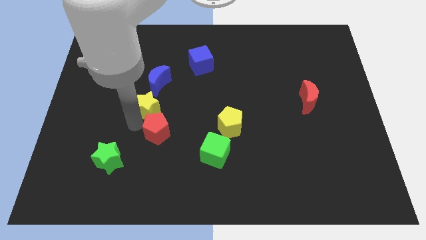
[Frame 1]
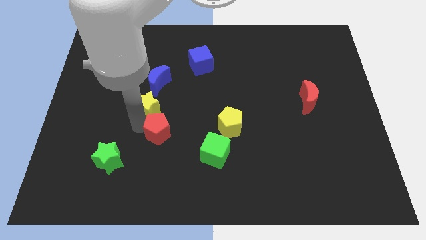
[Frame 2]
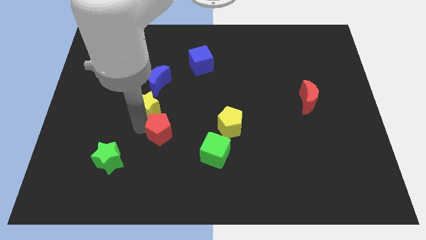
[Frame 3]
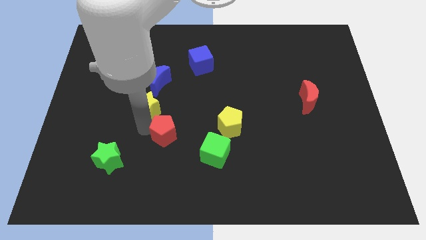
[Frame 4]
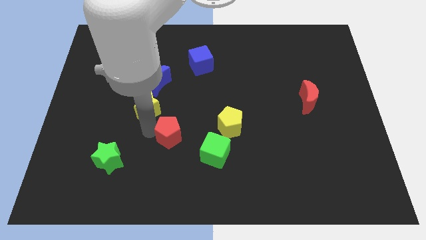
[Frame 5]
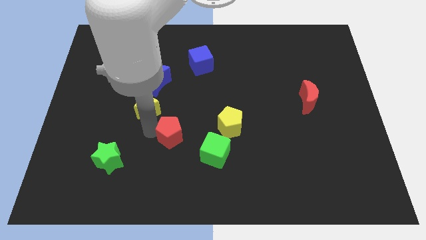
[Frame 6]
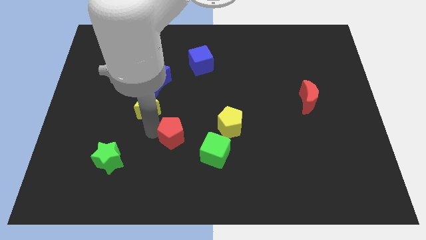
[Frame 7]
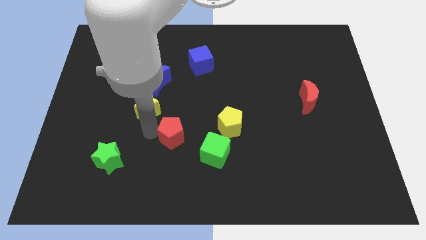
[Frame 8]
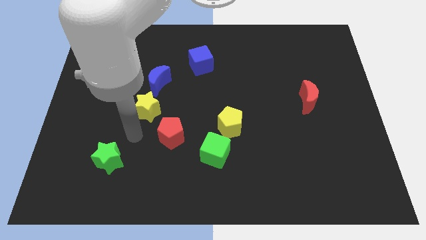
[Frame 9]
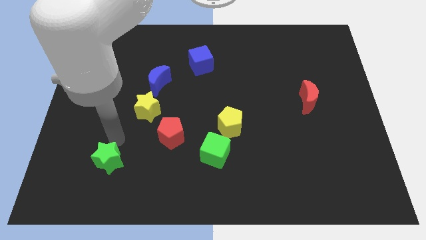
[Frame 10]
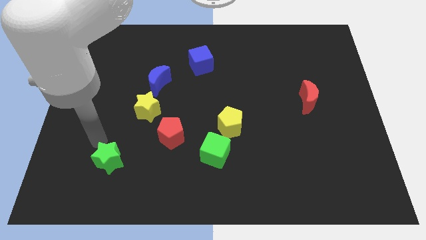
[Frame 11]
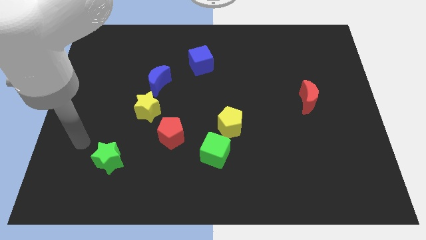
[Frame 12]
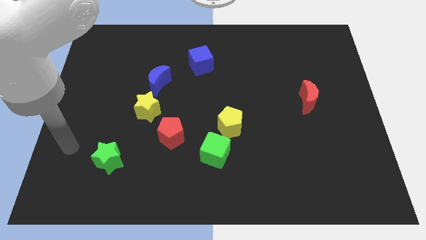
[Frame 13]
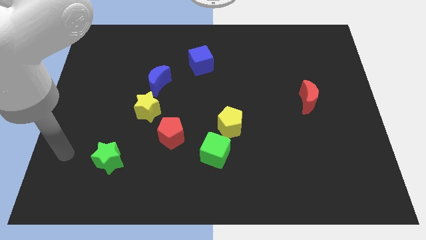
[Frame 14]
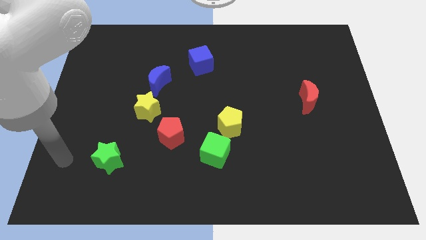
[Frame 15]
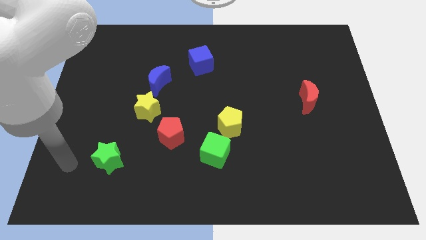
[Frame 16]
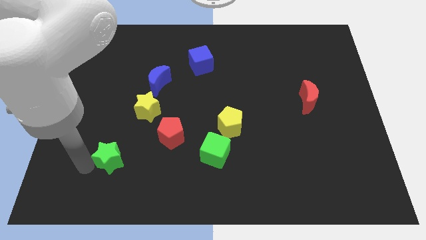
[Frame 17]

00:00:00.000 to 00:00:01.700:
separate red pentagon from yellow star

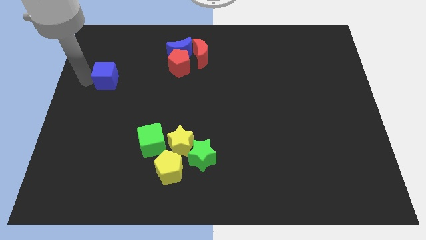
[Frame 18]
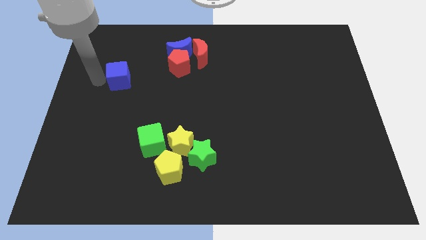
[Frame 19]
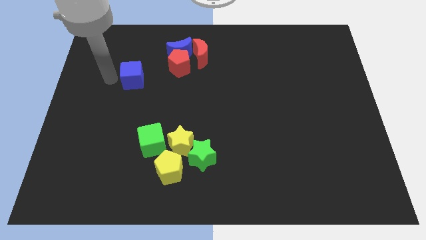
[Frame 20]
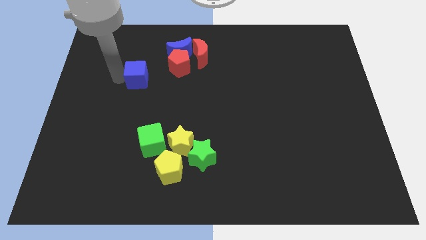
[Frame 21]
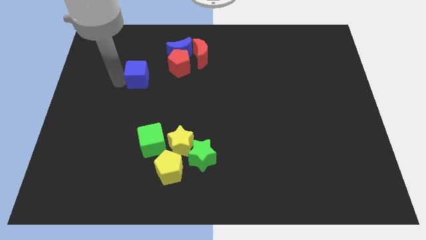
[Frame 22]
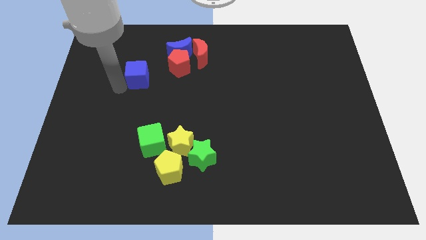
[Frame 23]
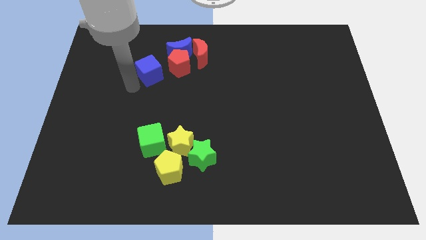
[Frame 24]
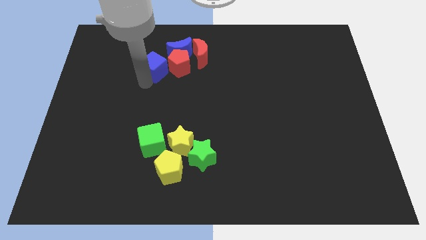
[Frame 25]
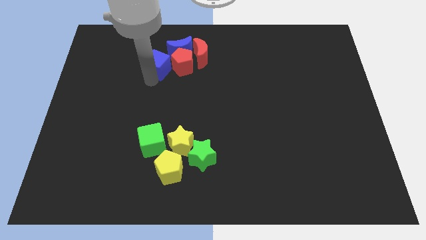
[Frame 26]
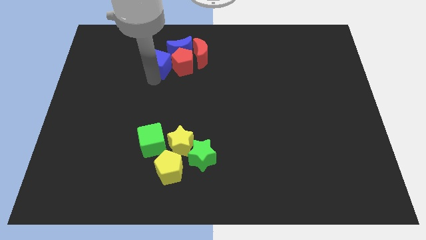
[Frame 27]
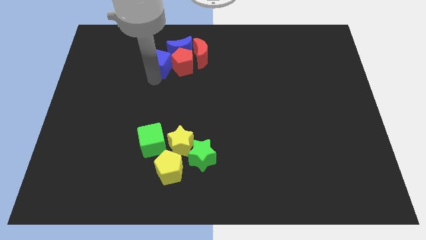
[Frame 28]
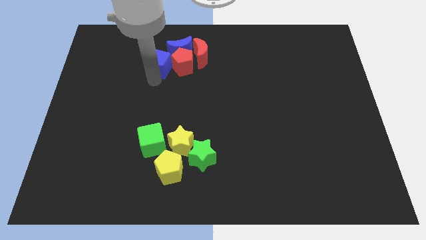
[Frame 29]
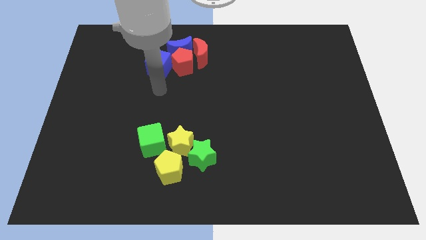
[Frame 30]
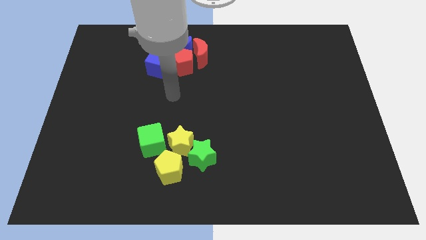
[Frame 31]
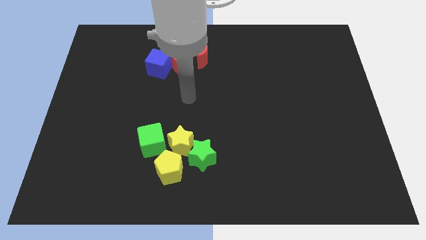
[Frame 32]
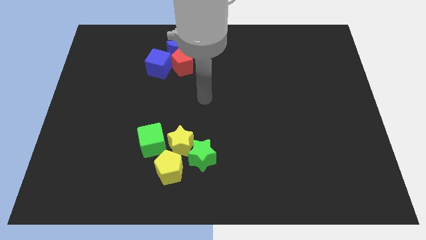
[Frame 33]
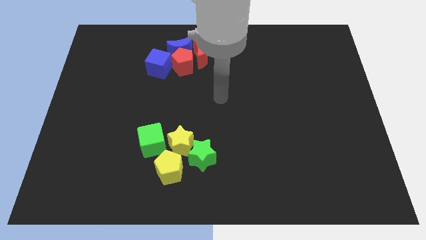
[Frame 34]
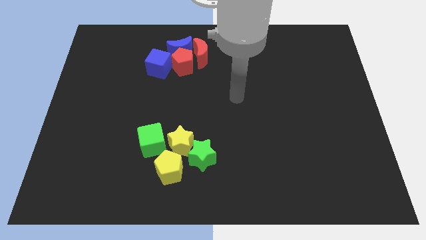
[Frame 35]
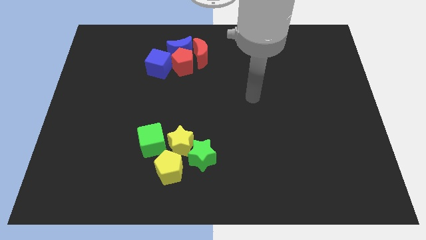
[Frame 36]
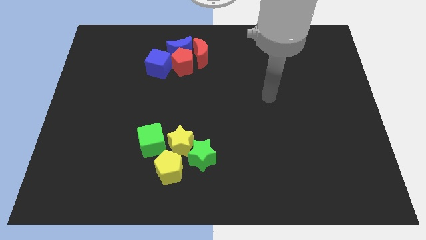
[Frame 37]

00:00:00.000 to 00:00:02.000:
push the blue cube close to the red pentagon

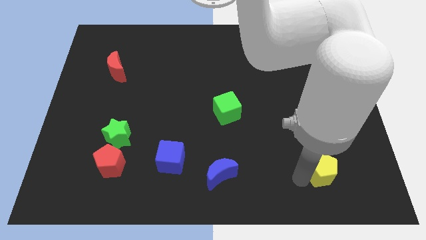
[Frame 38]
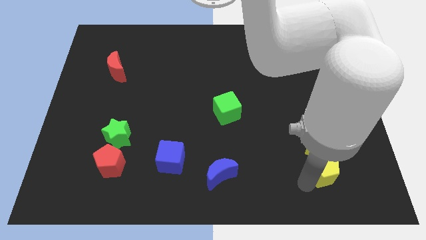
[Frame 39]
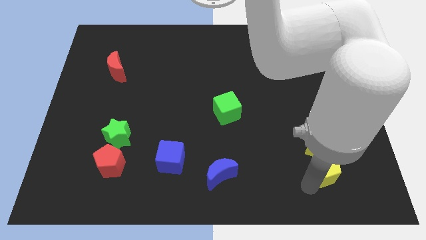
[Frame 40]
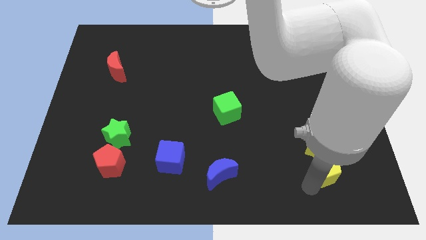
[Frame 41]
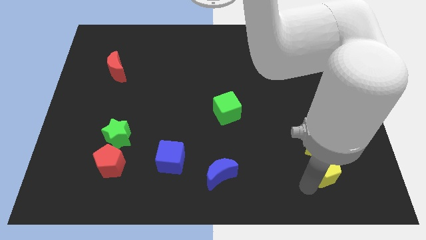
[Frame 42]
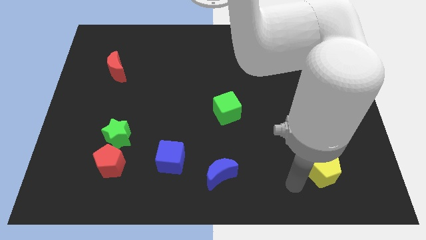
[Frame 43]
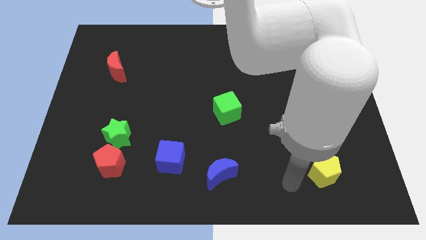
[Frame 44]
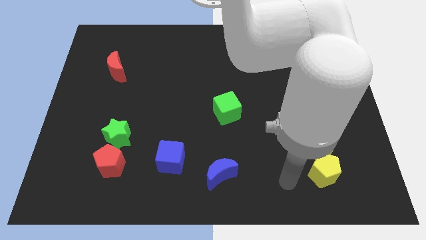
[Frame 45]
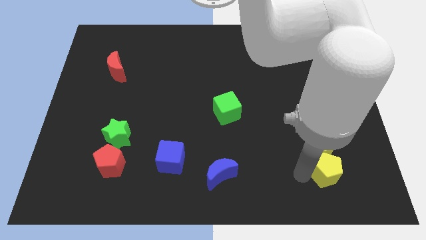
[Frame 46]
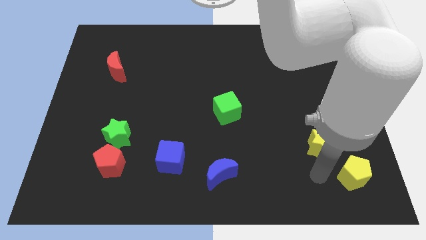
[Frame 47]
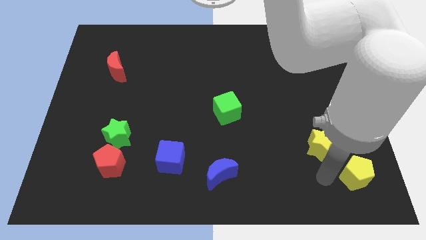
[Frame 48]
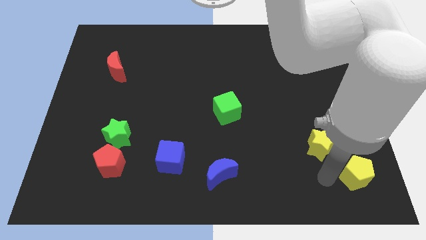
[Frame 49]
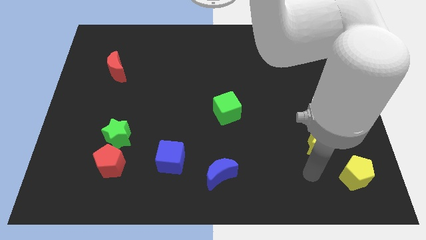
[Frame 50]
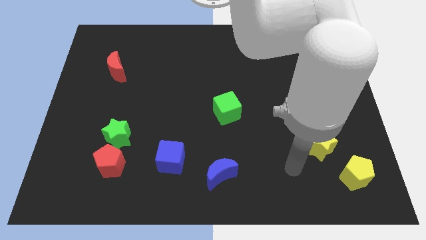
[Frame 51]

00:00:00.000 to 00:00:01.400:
separate the yellow pentagon from yellow star

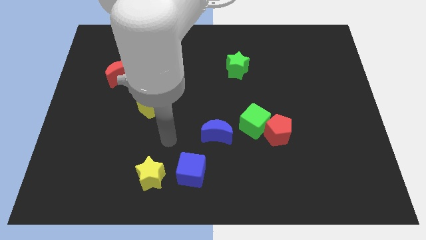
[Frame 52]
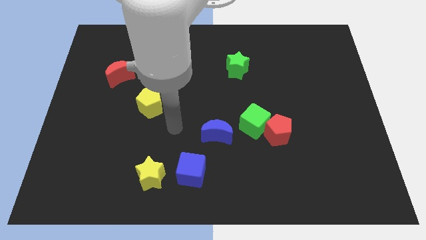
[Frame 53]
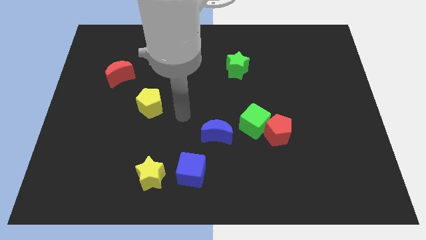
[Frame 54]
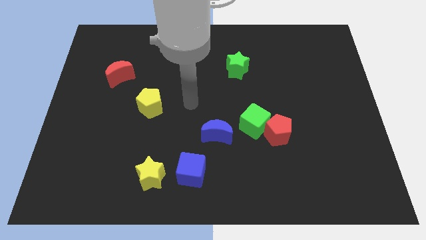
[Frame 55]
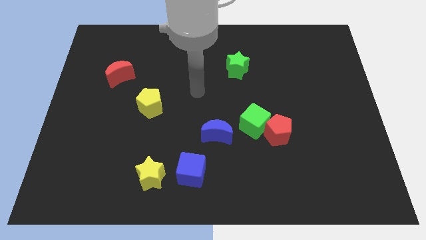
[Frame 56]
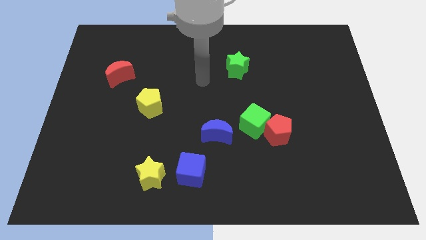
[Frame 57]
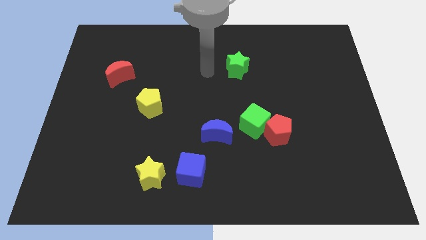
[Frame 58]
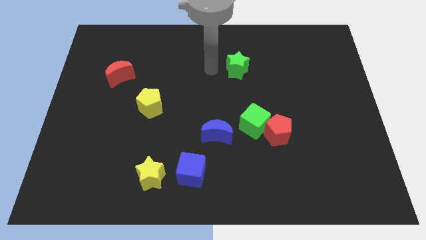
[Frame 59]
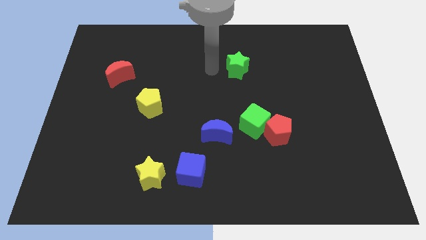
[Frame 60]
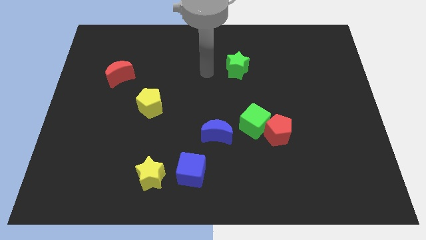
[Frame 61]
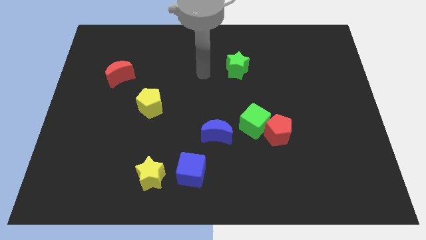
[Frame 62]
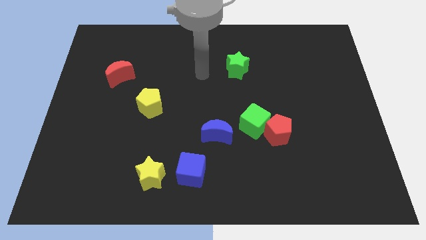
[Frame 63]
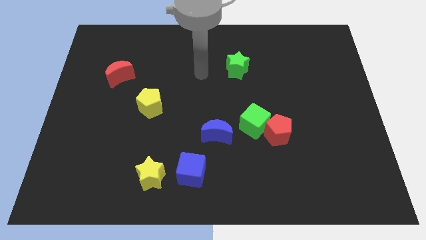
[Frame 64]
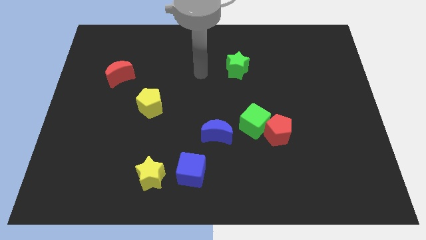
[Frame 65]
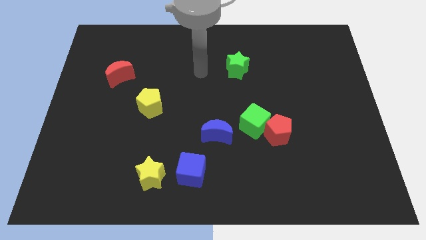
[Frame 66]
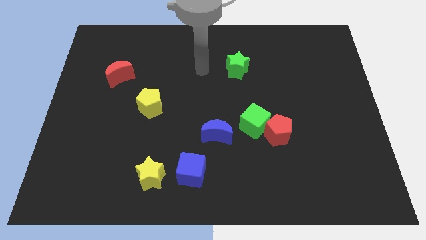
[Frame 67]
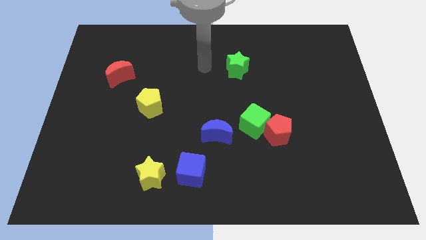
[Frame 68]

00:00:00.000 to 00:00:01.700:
move your arm slightly up

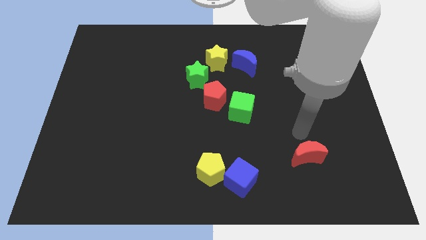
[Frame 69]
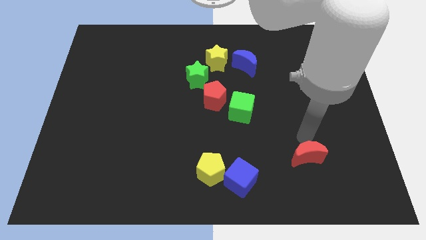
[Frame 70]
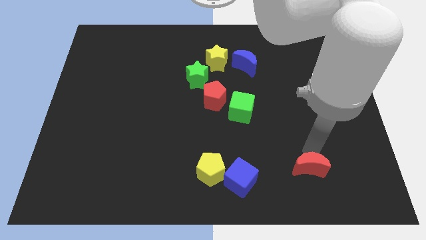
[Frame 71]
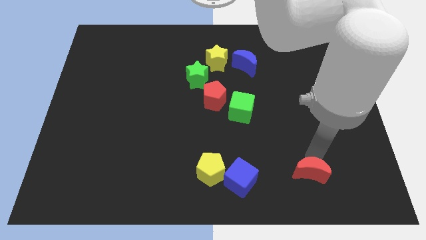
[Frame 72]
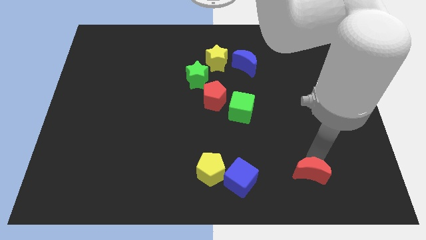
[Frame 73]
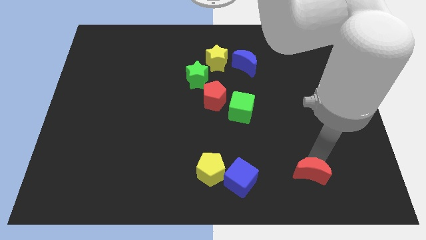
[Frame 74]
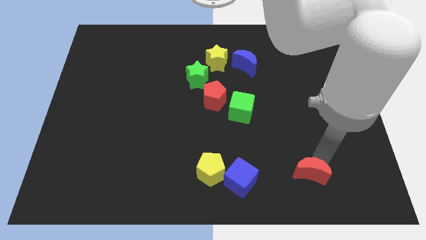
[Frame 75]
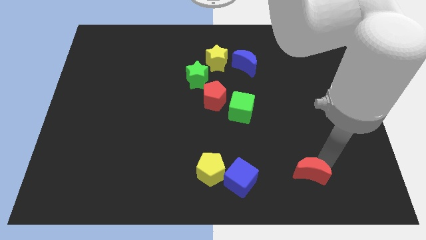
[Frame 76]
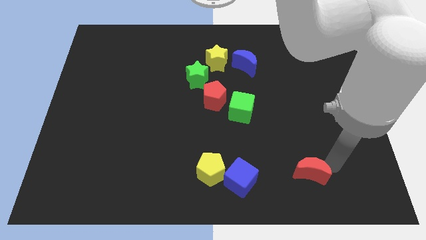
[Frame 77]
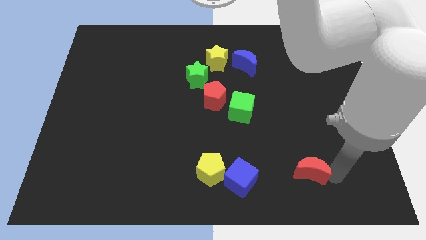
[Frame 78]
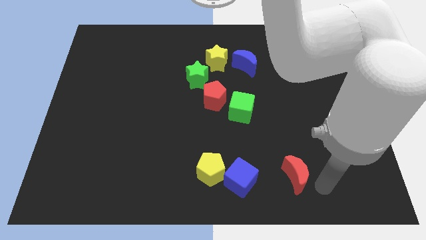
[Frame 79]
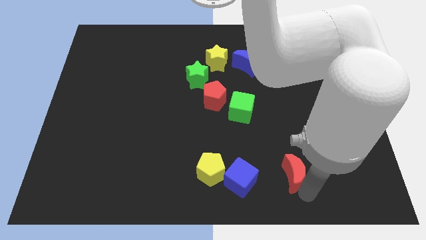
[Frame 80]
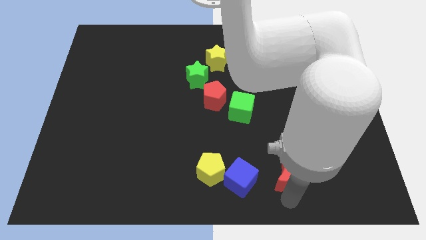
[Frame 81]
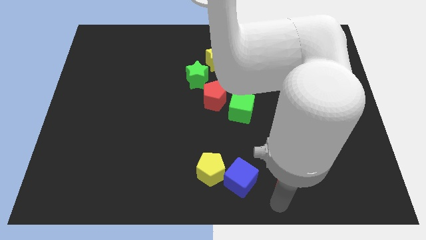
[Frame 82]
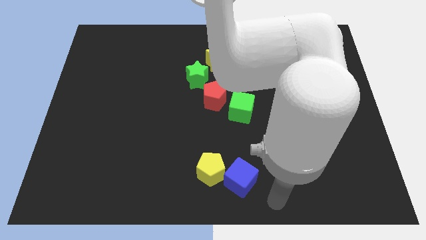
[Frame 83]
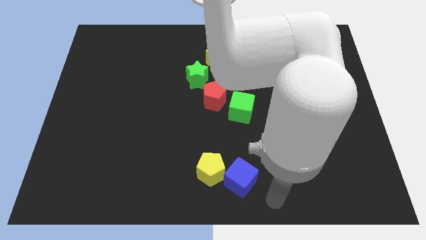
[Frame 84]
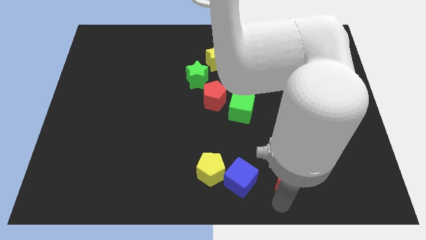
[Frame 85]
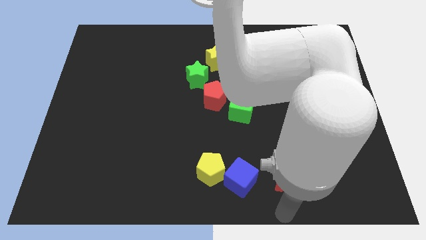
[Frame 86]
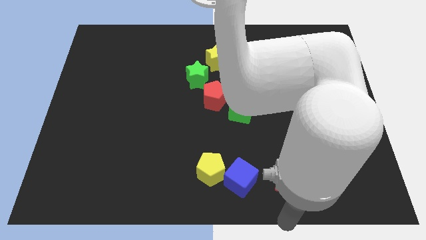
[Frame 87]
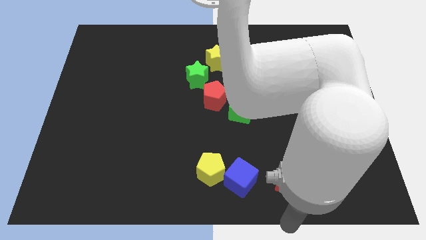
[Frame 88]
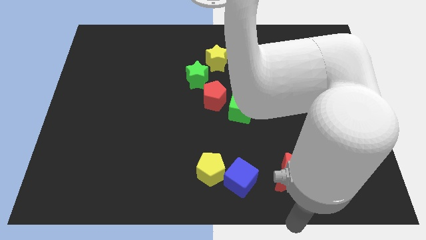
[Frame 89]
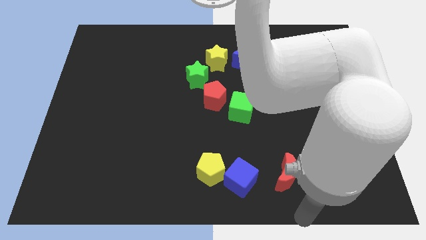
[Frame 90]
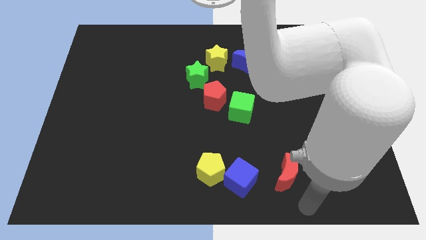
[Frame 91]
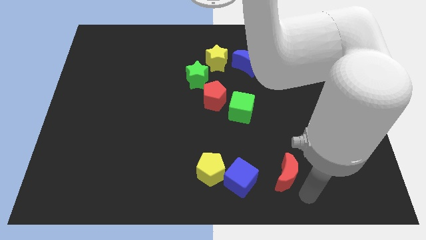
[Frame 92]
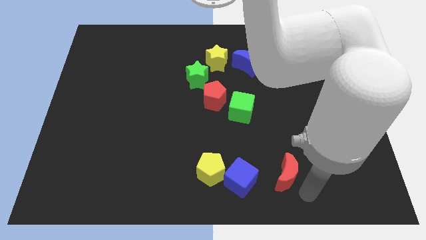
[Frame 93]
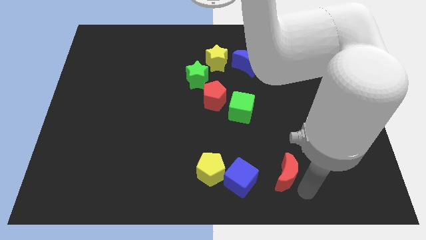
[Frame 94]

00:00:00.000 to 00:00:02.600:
push red moon towards blue cube
